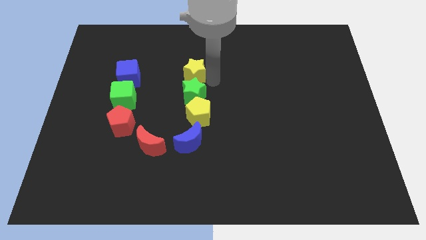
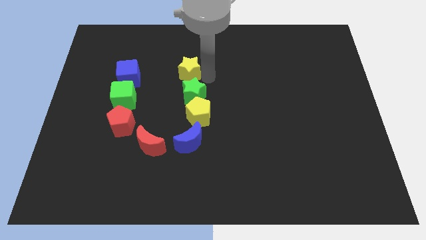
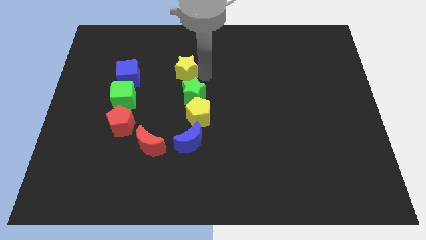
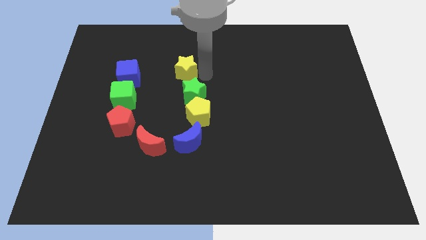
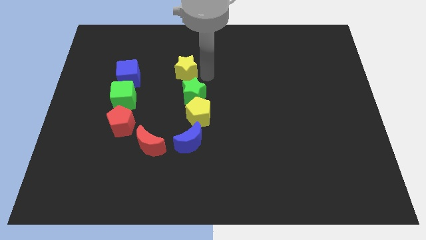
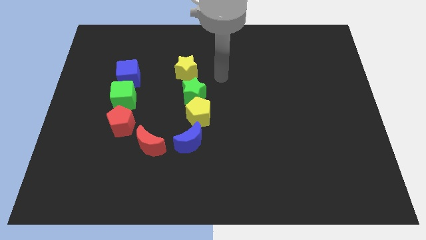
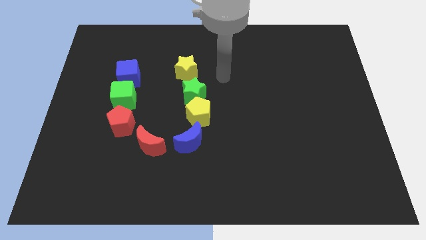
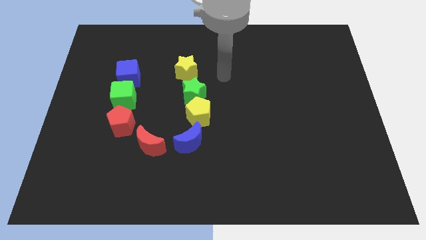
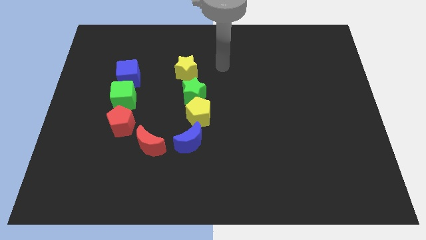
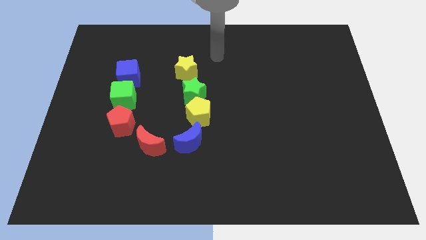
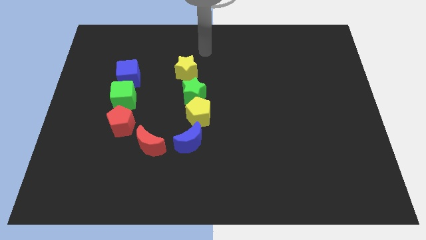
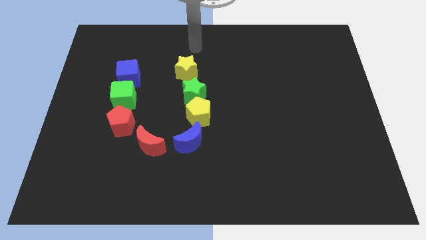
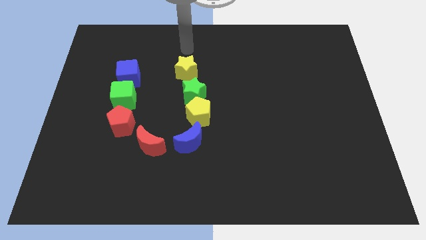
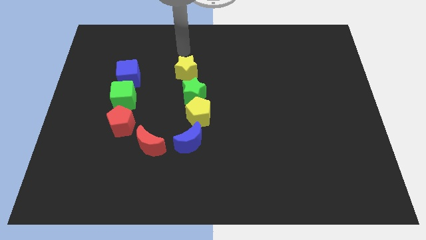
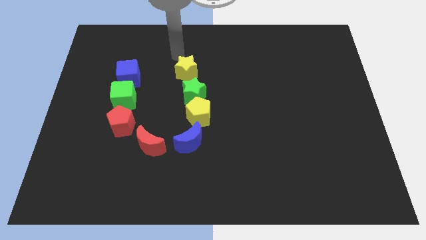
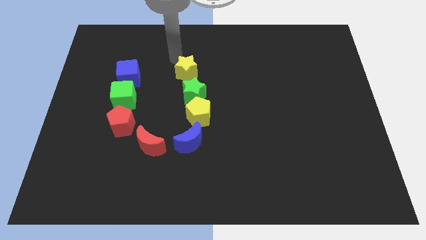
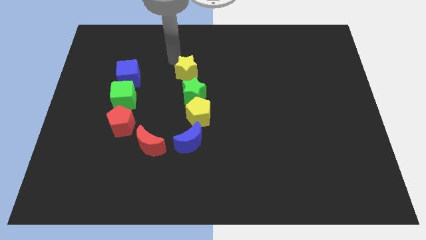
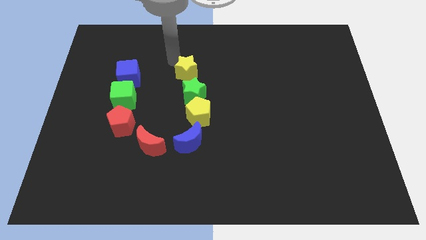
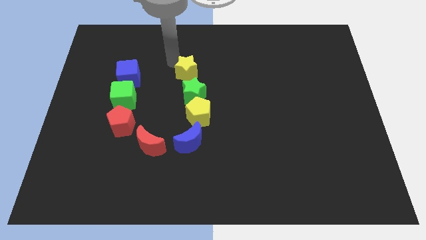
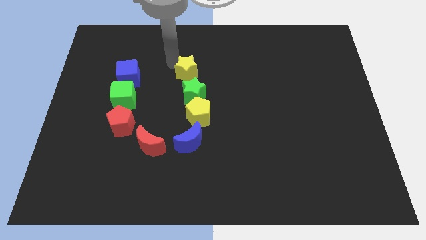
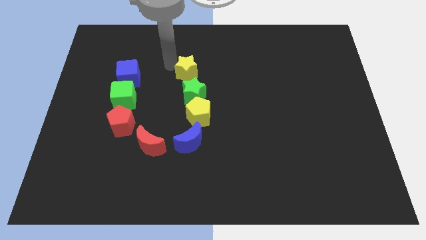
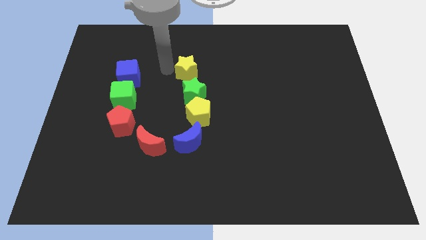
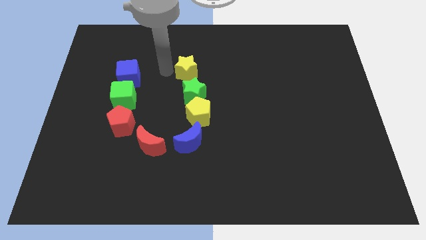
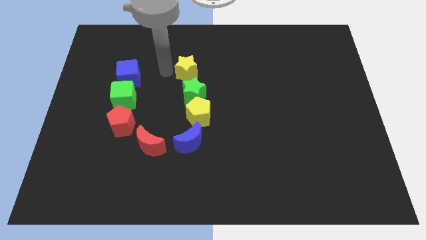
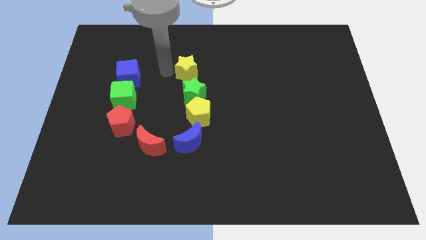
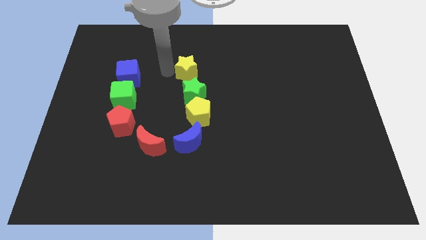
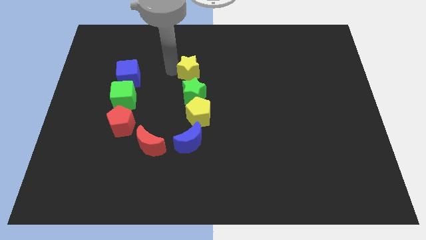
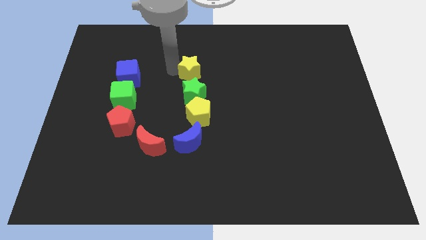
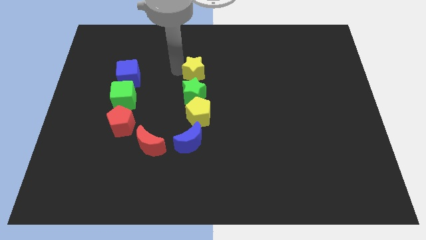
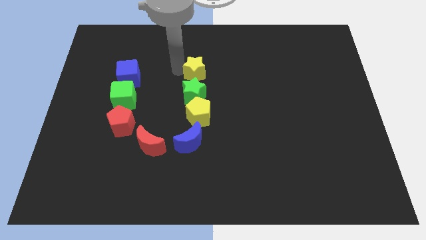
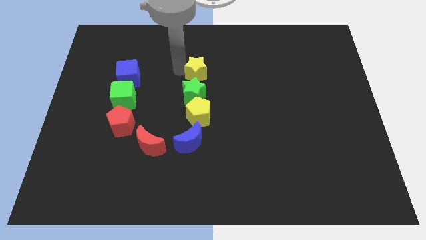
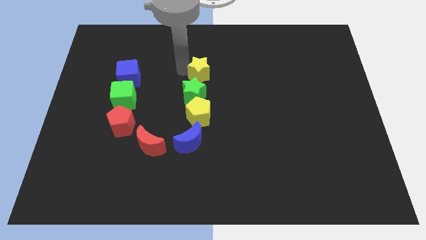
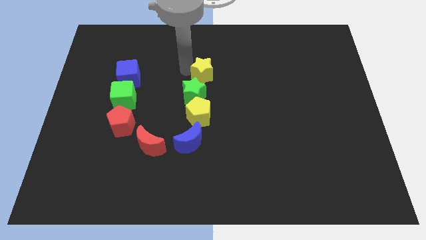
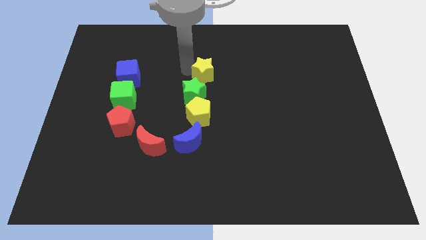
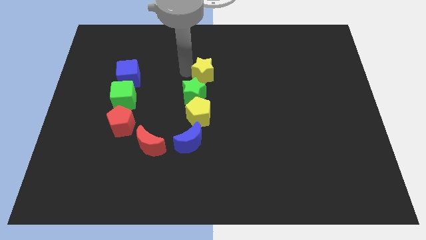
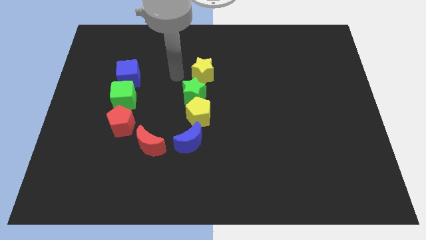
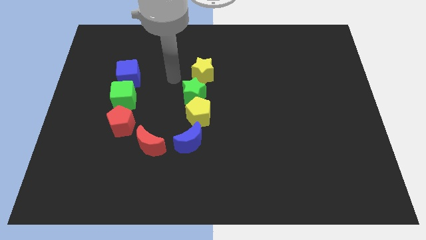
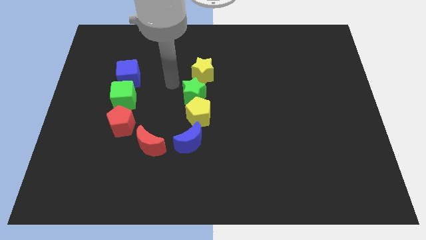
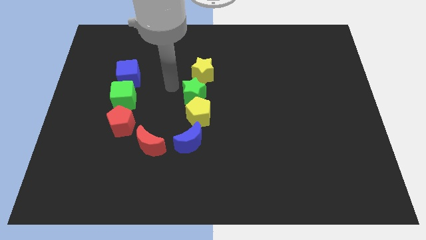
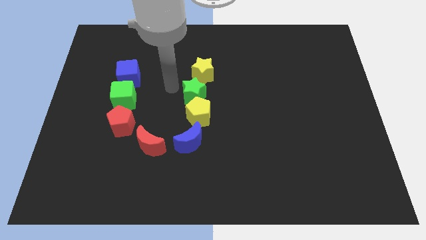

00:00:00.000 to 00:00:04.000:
move the yellow star slightly to the right

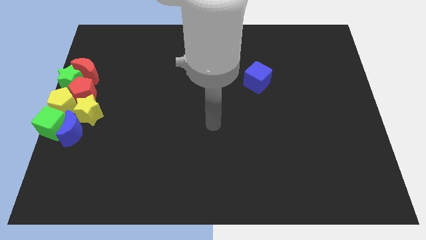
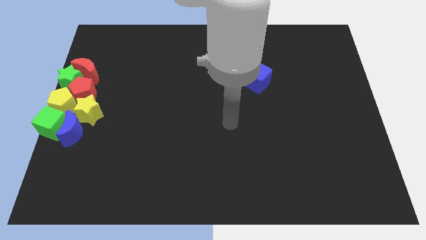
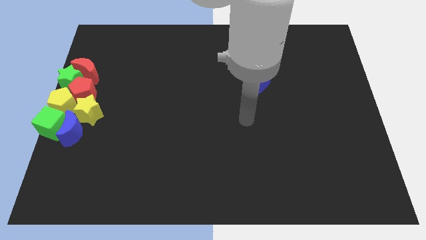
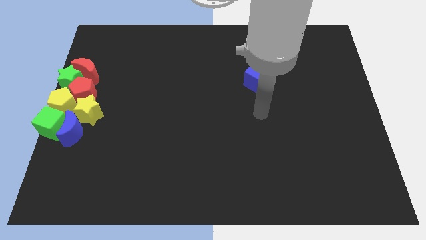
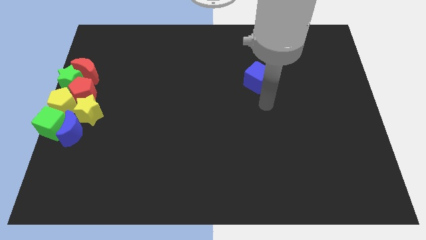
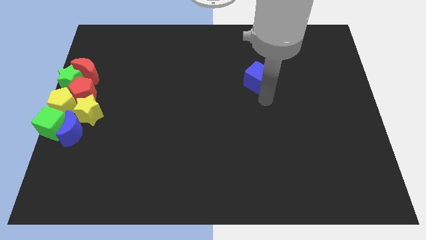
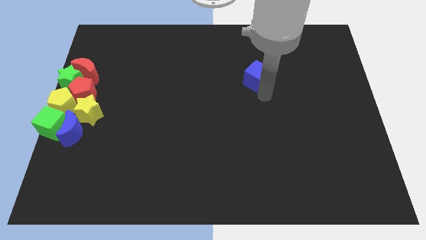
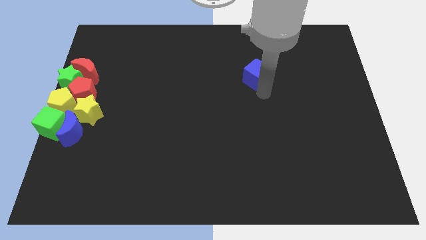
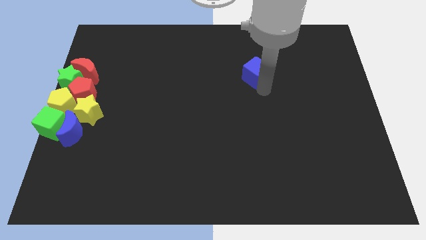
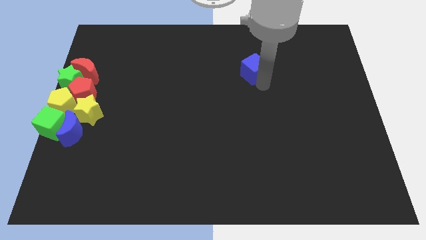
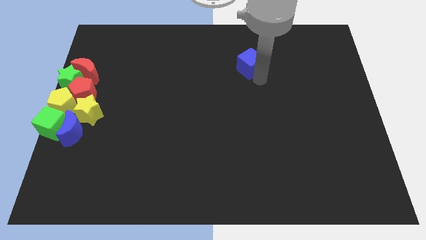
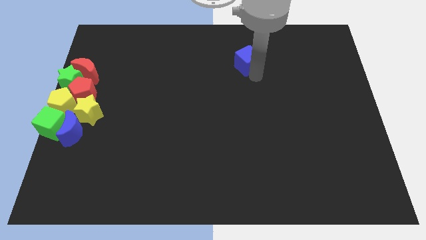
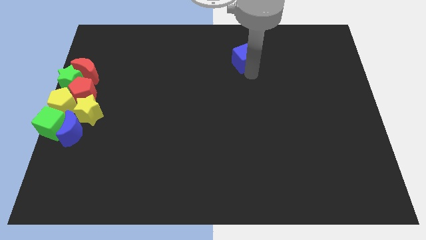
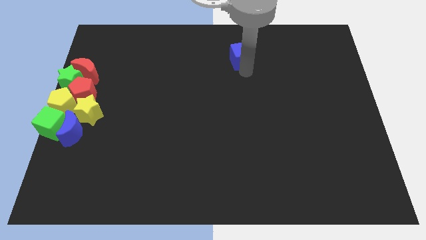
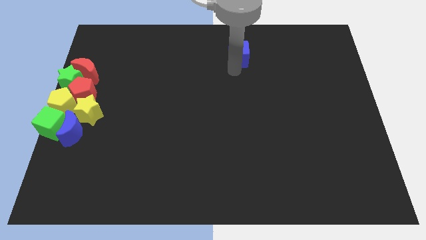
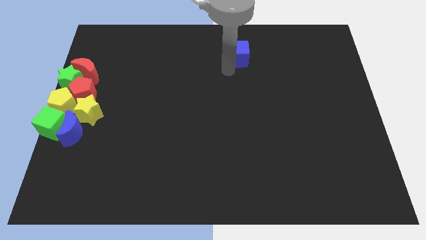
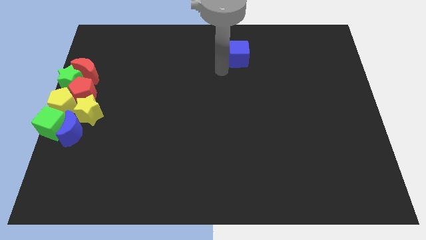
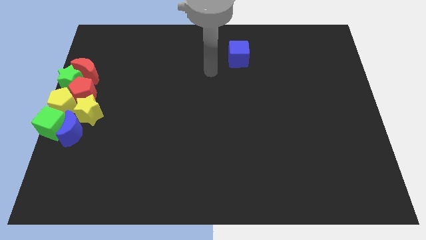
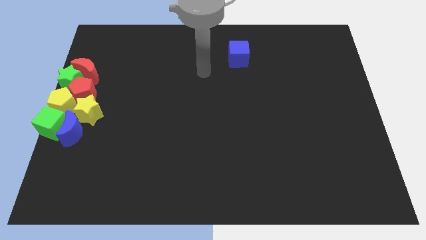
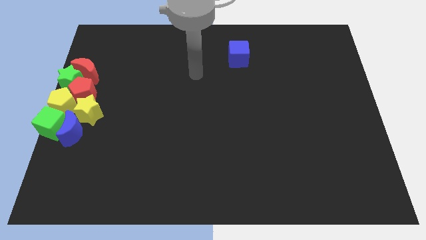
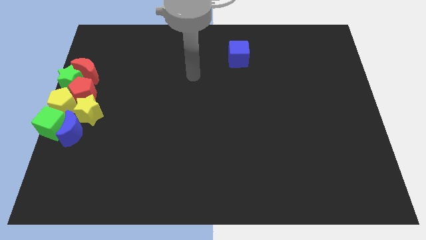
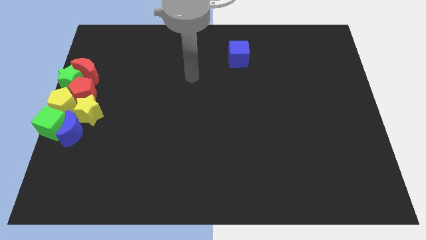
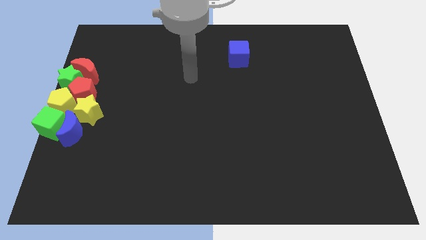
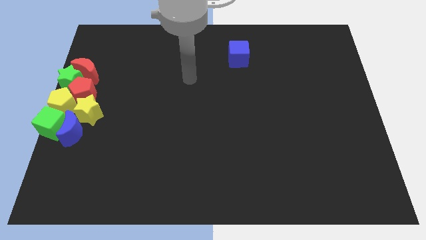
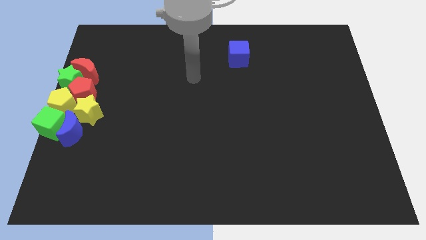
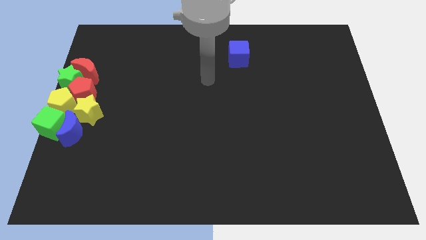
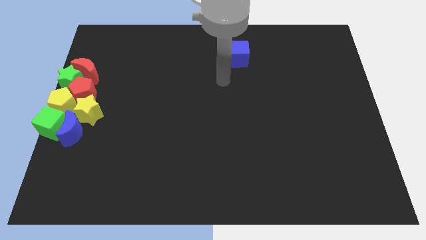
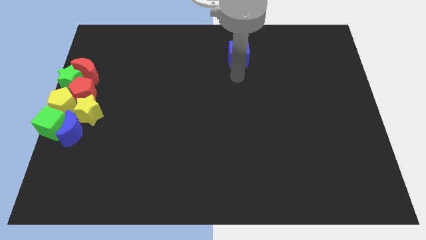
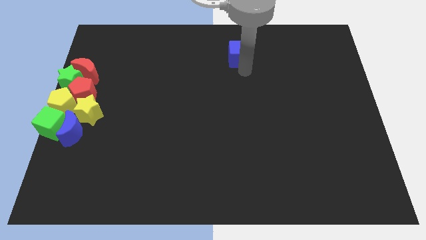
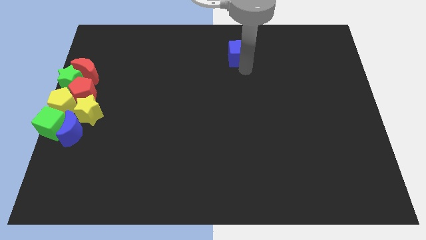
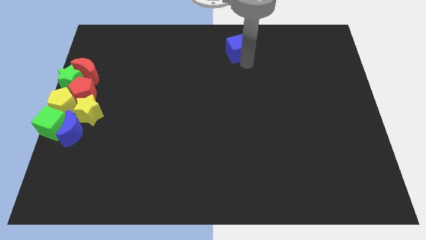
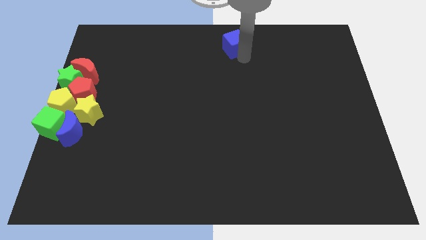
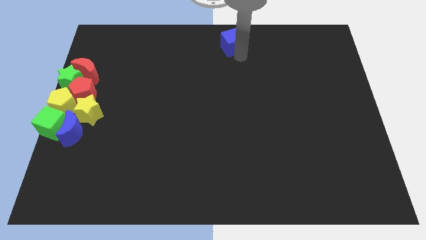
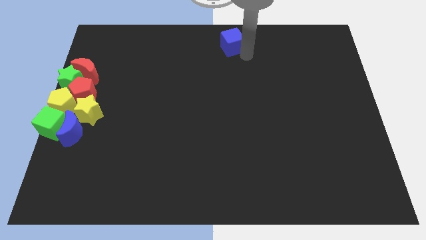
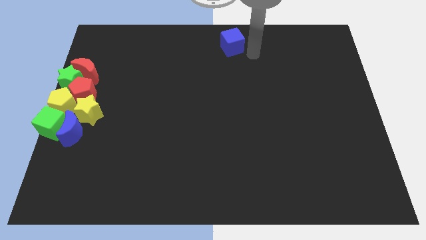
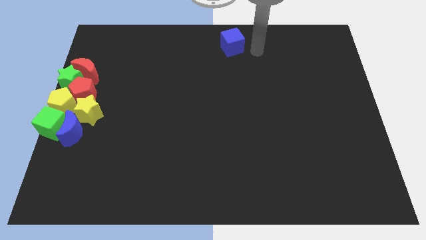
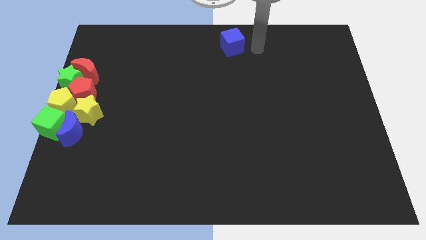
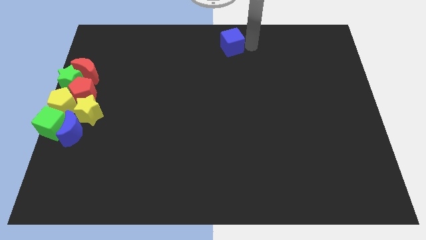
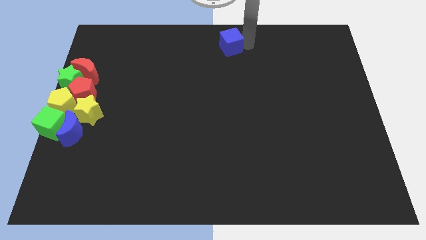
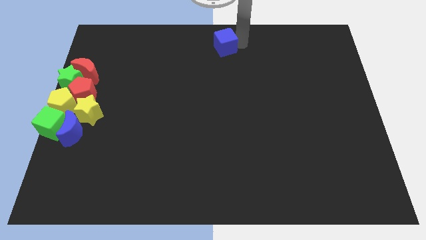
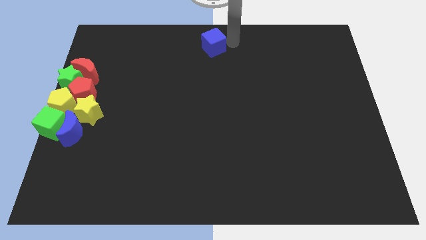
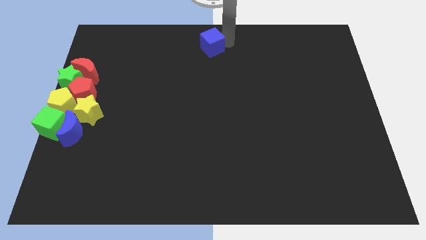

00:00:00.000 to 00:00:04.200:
move the blue cube to the top center of the board

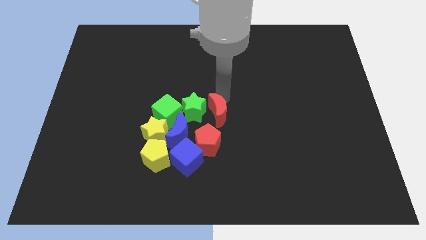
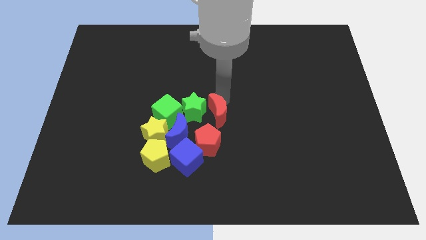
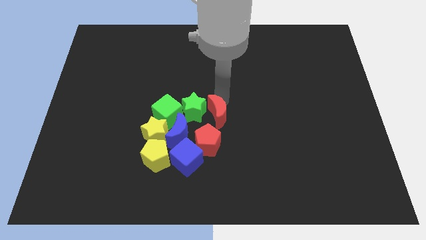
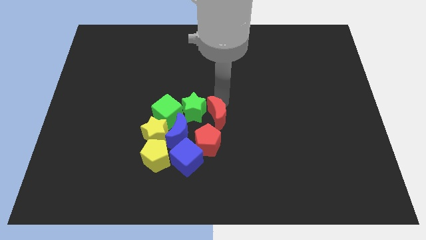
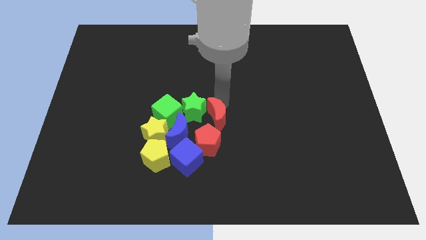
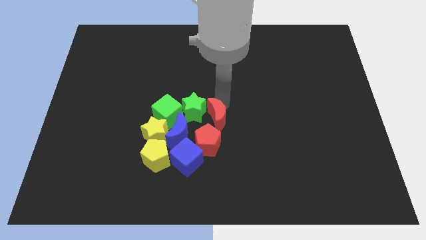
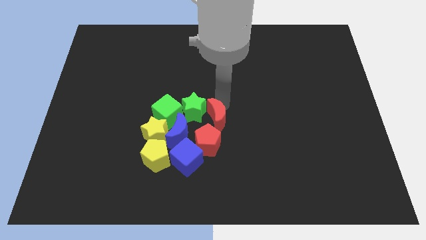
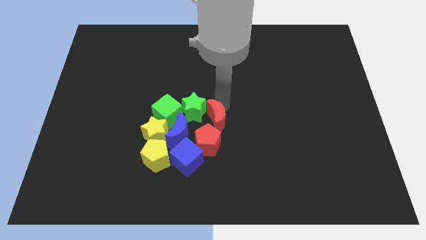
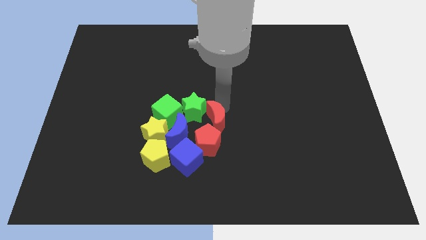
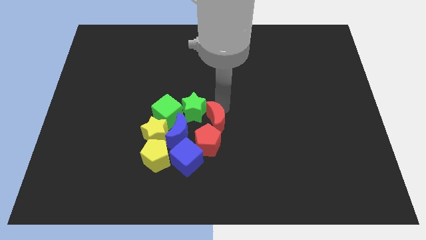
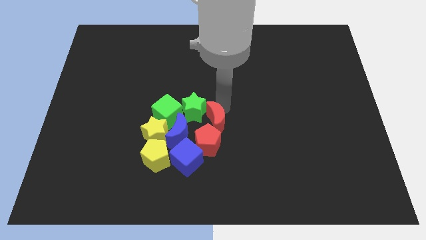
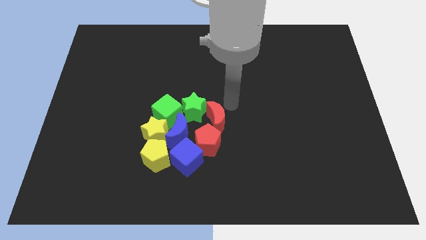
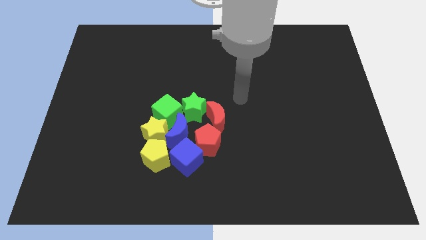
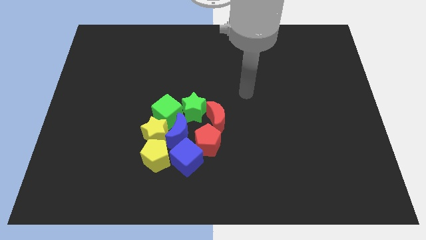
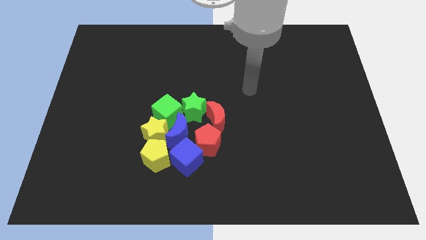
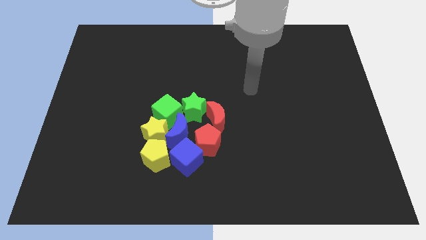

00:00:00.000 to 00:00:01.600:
push the red moon above the red pentagon
